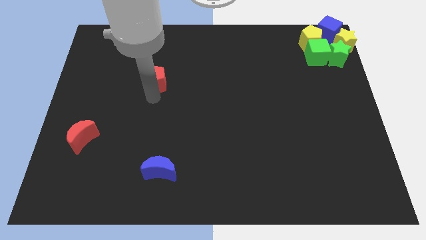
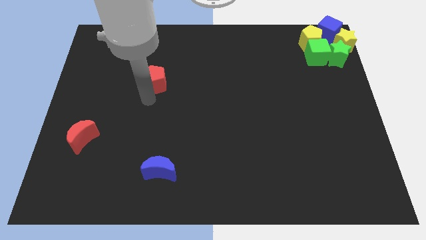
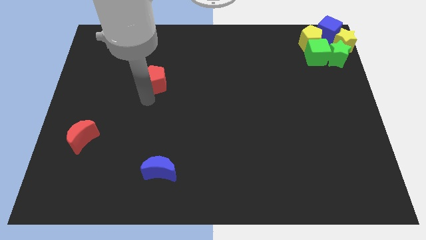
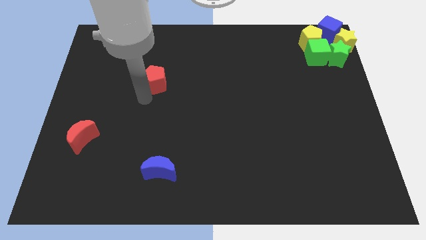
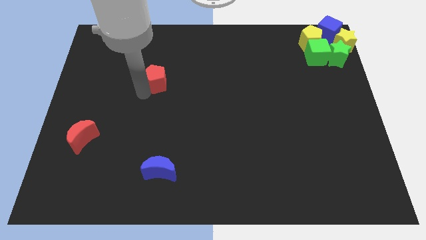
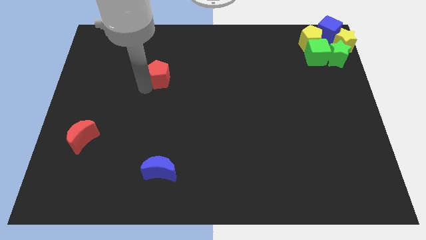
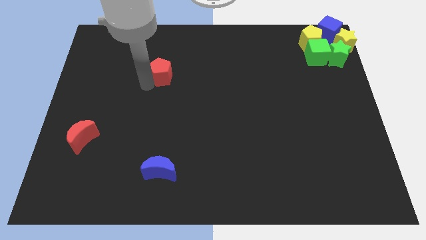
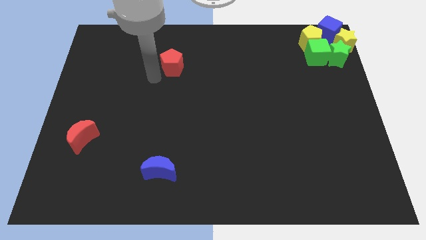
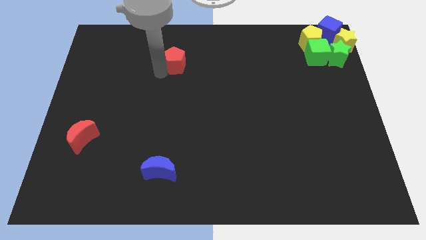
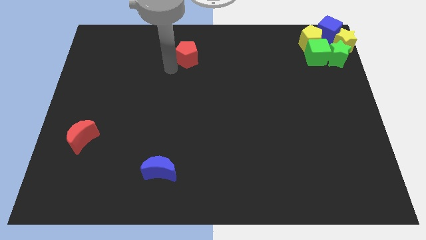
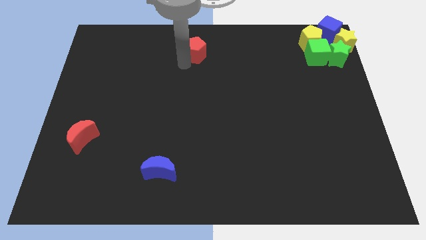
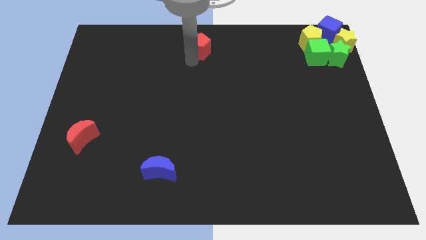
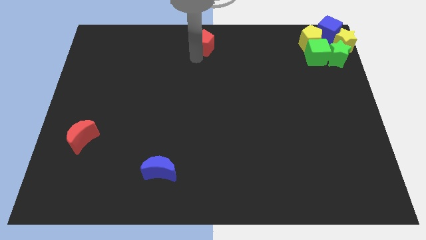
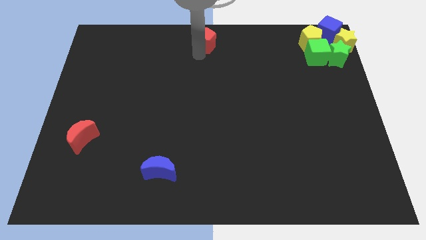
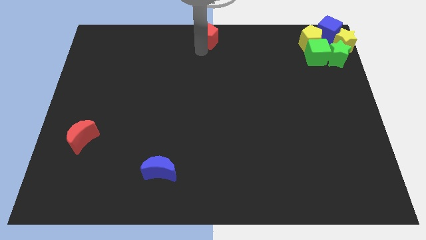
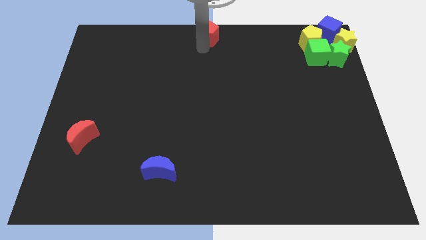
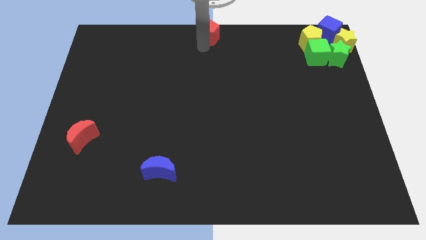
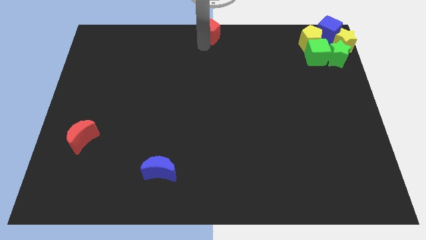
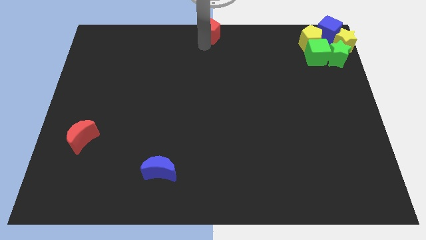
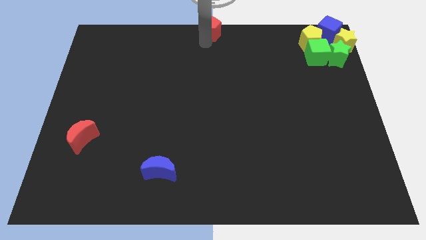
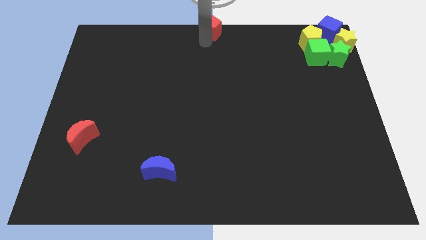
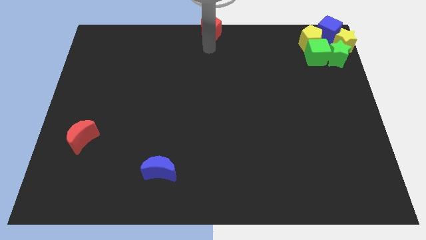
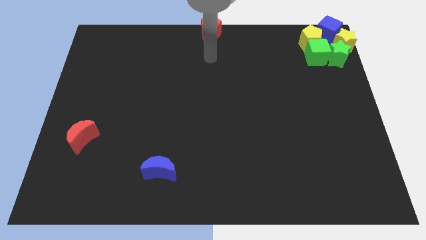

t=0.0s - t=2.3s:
place the red pentagon at the top center of the board

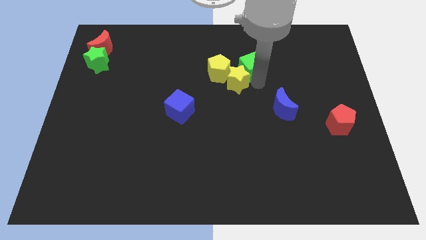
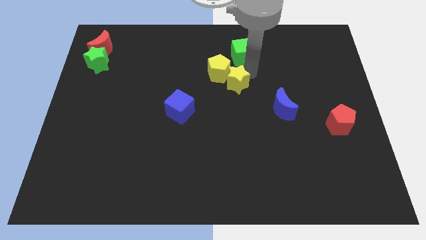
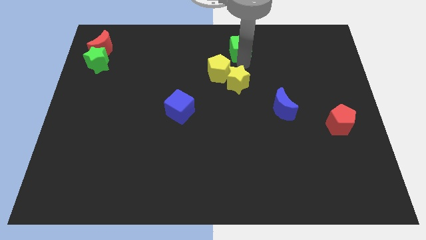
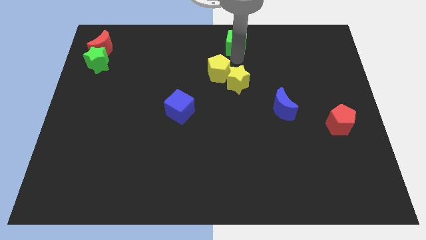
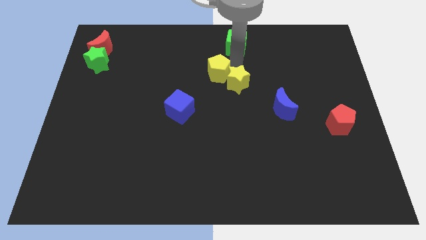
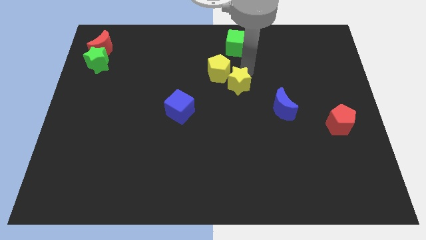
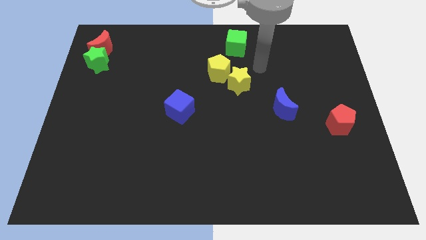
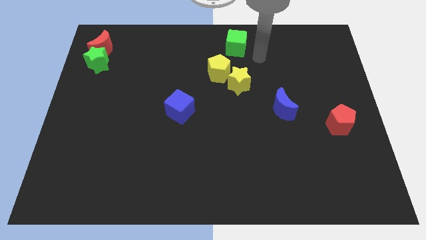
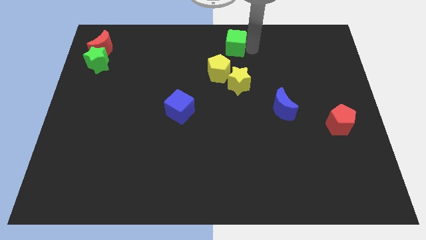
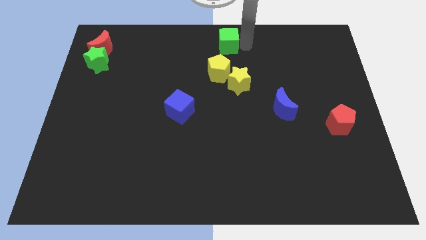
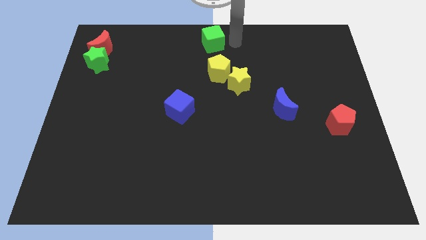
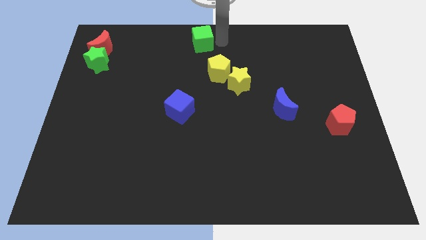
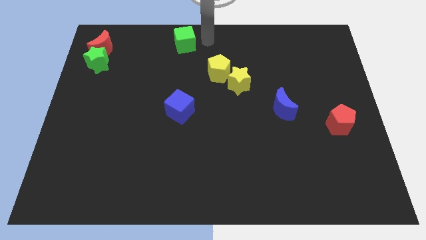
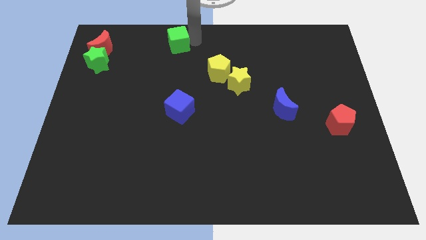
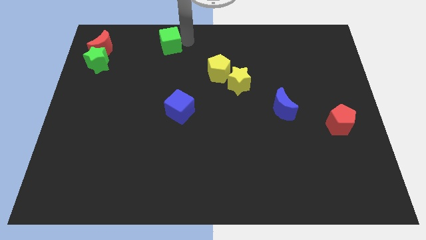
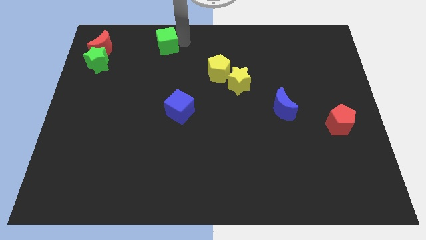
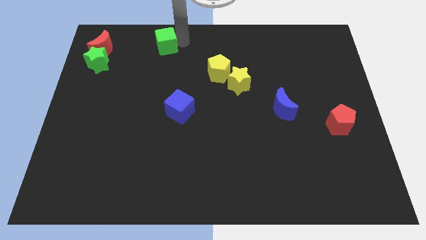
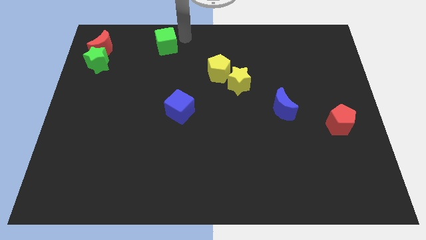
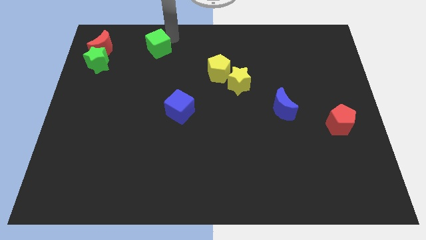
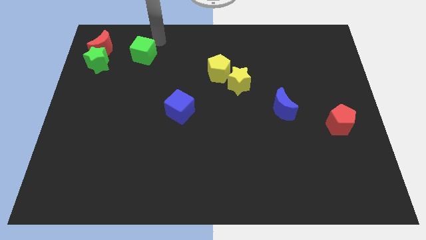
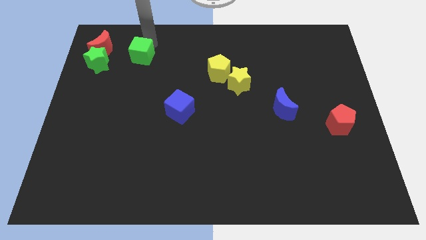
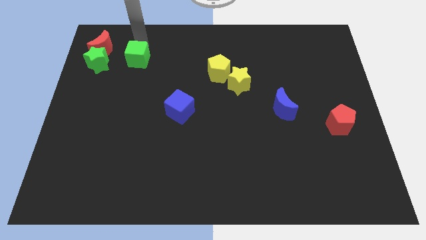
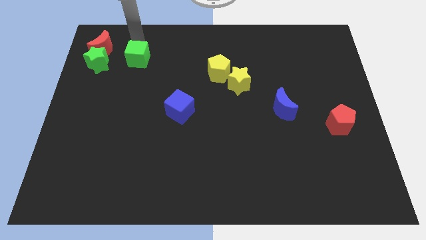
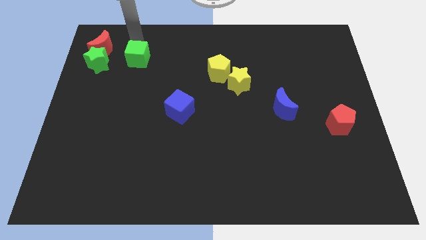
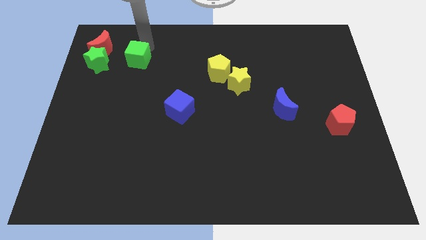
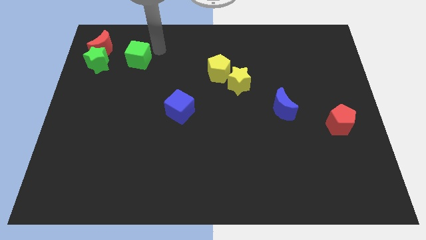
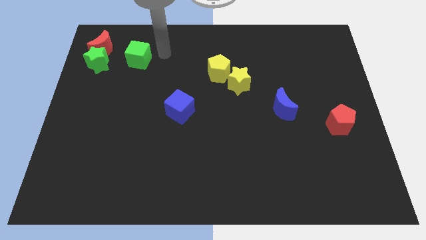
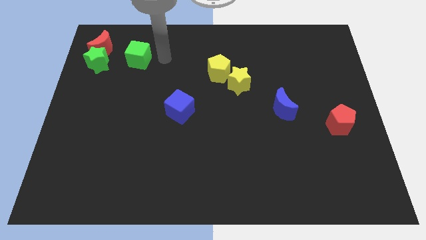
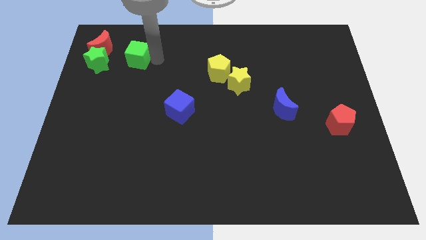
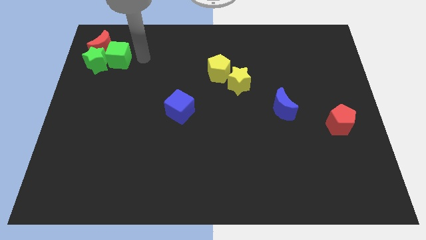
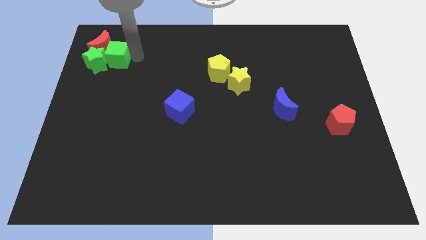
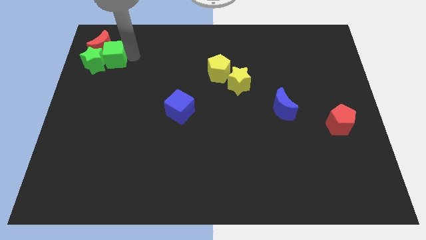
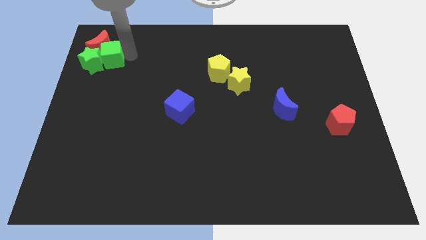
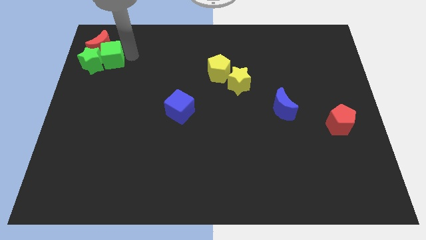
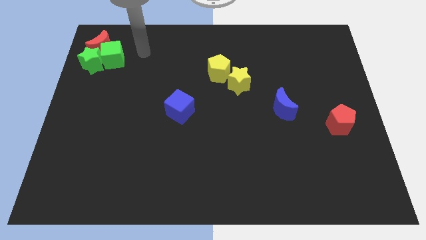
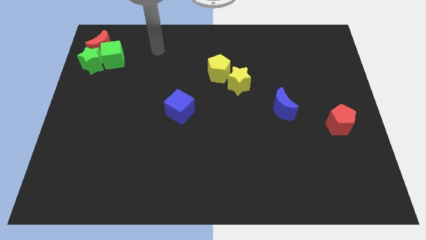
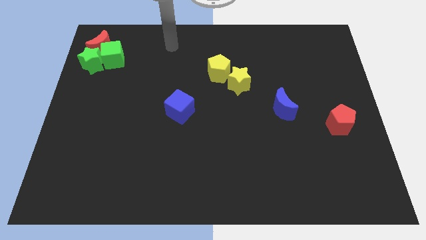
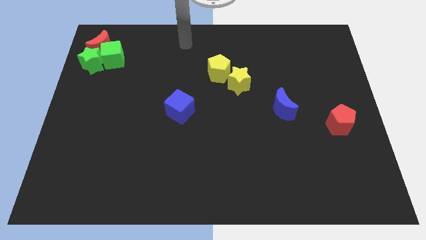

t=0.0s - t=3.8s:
place the green cube into green star

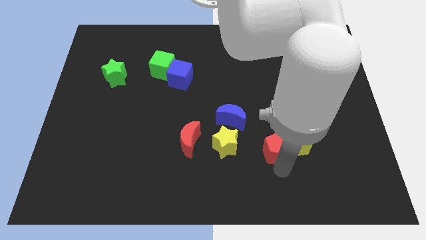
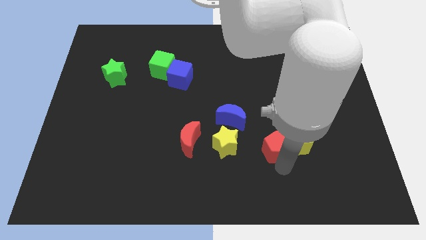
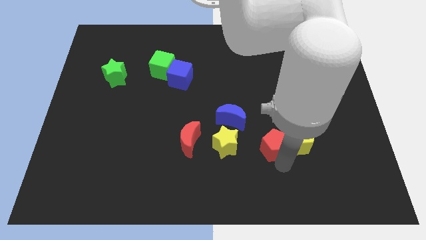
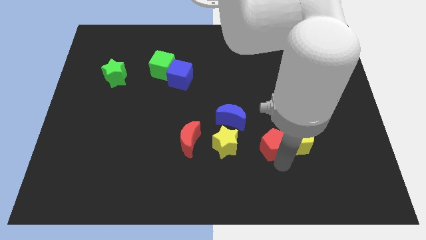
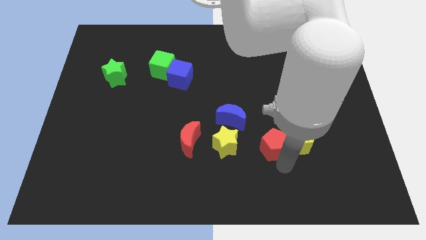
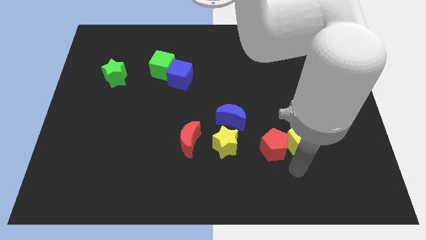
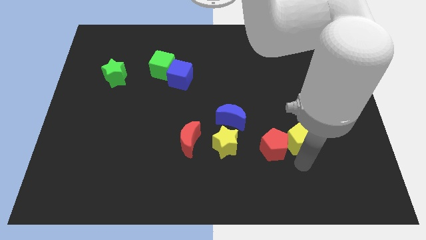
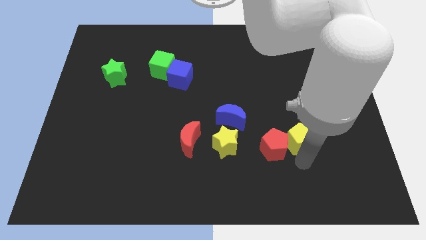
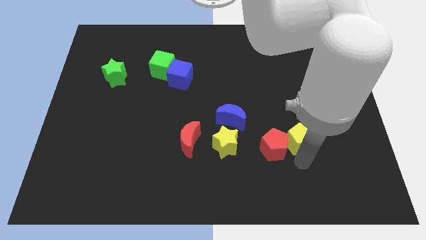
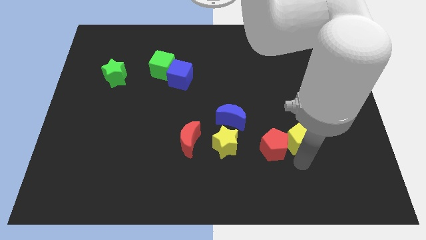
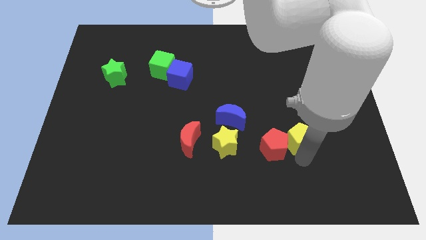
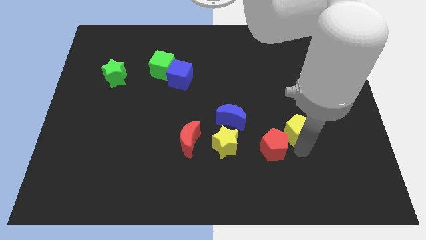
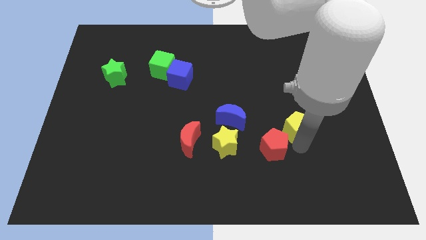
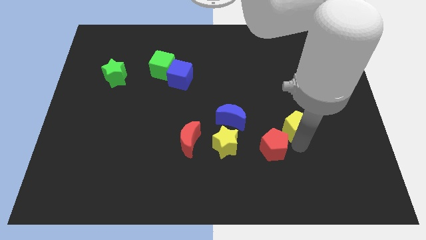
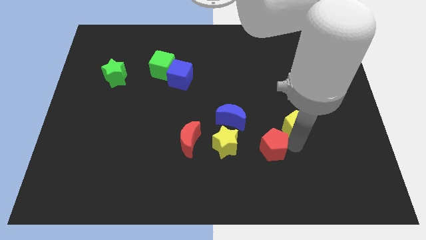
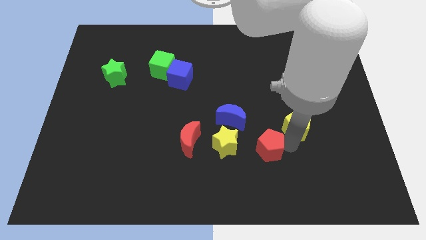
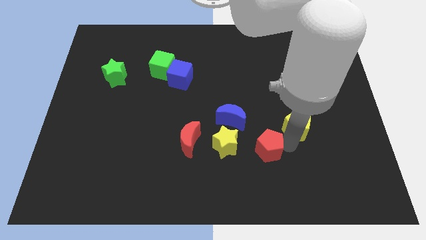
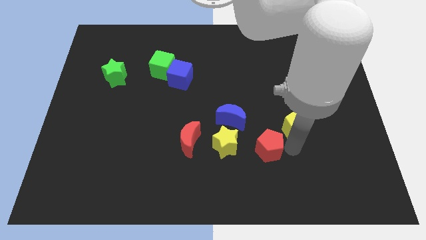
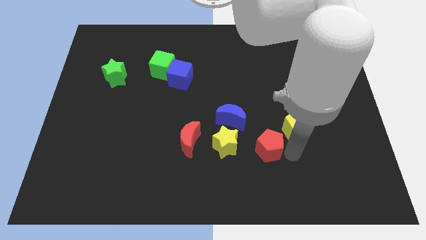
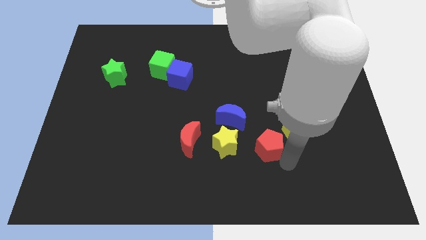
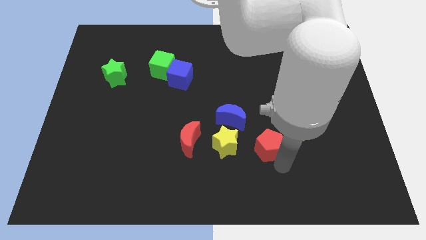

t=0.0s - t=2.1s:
move red pentagon close to yellow star

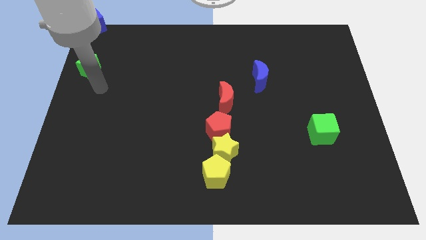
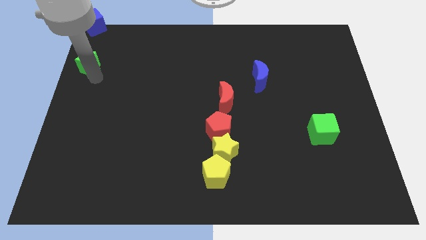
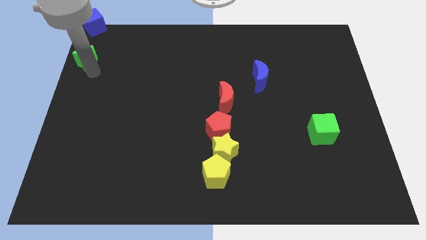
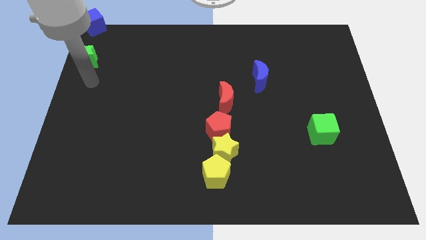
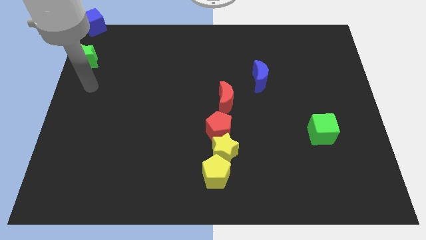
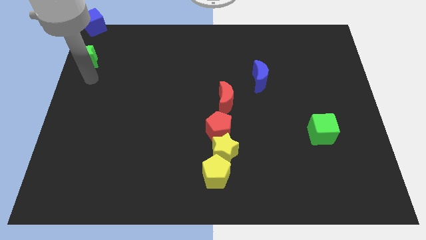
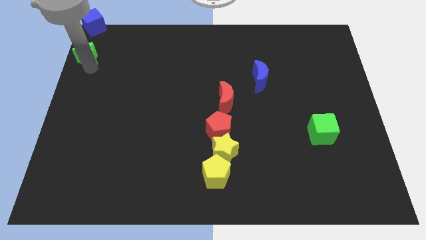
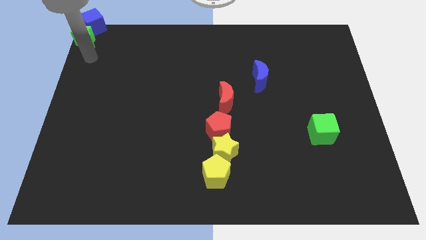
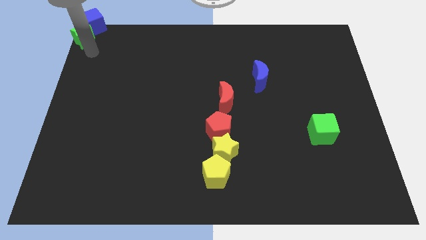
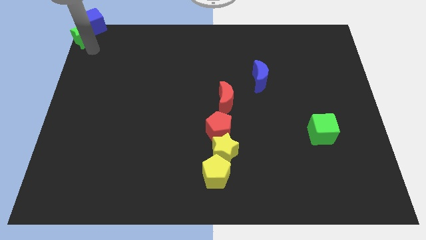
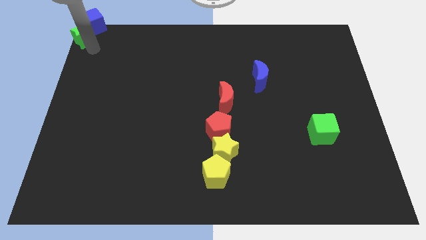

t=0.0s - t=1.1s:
push green star in to blue cube
